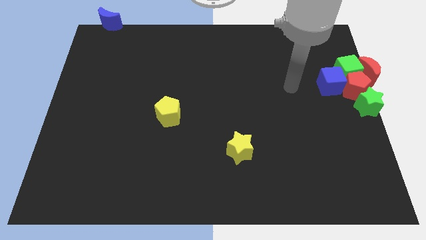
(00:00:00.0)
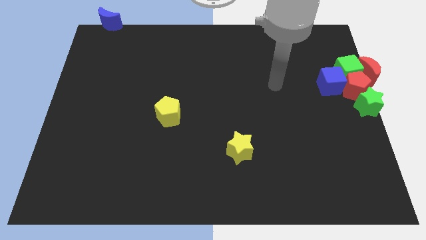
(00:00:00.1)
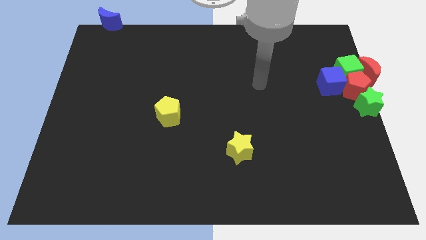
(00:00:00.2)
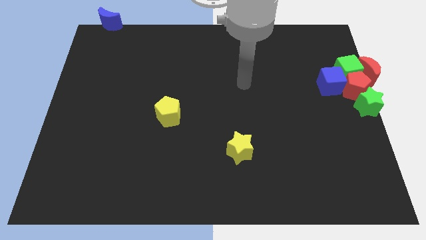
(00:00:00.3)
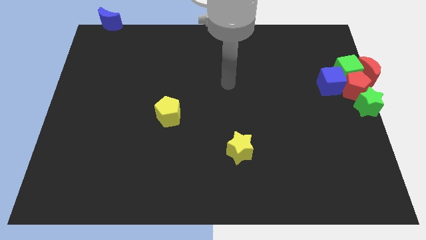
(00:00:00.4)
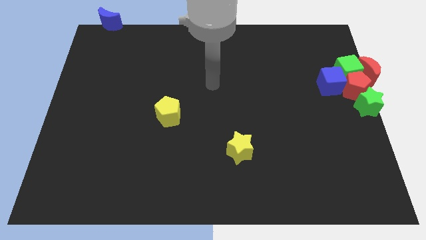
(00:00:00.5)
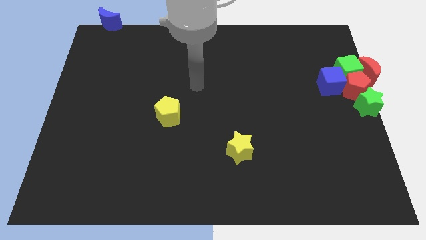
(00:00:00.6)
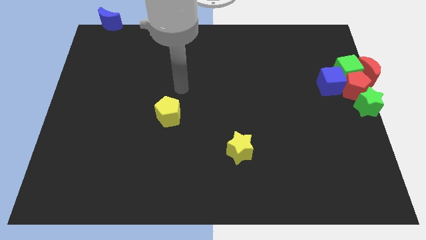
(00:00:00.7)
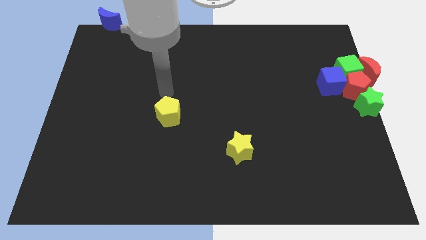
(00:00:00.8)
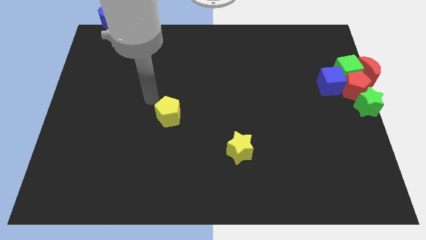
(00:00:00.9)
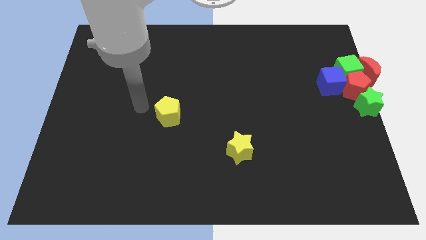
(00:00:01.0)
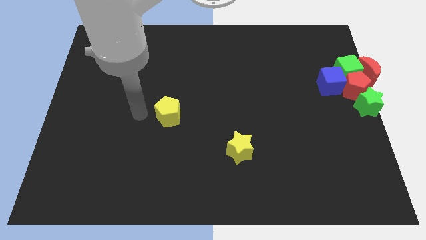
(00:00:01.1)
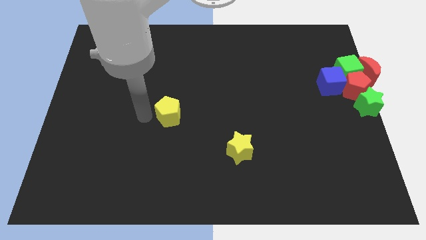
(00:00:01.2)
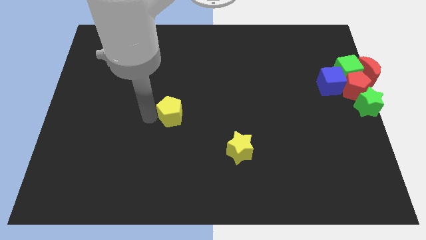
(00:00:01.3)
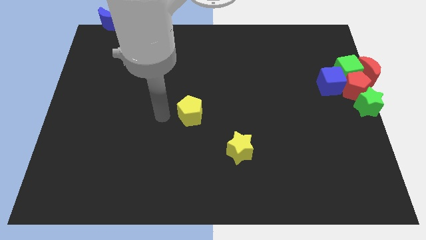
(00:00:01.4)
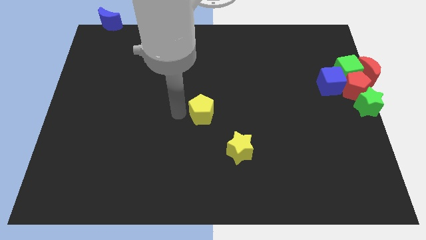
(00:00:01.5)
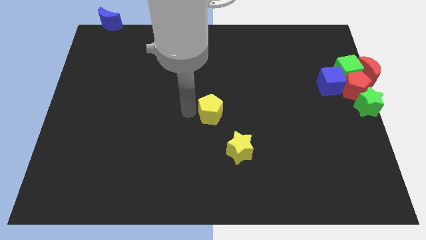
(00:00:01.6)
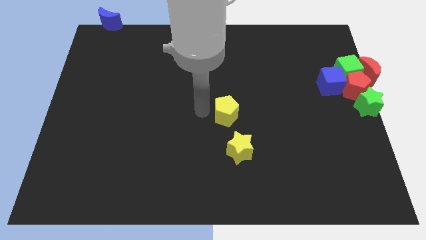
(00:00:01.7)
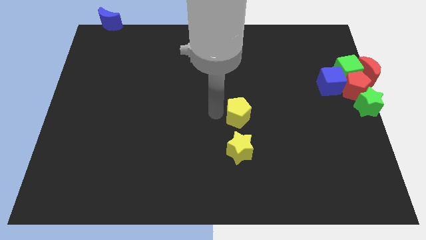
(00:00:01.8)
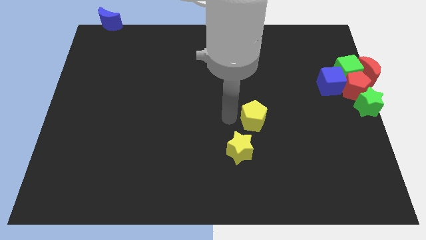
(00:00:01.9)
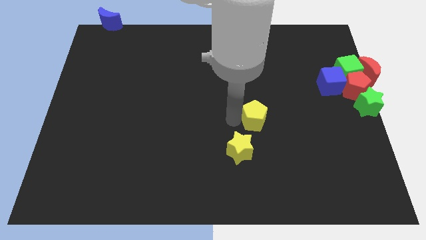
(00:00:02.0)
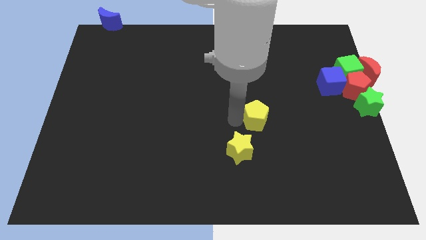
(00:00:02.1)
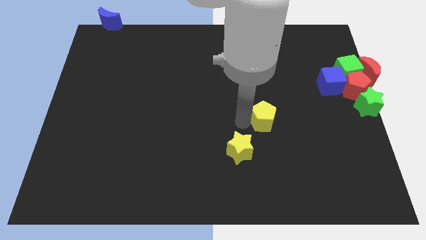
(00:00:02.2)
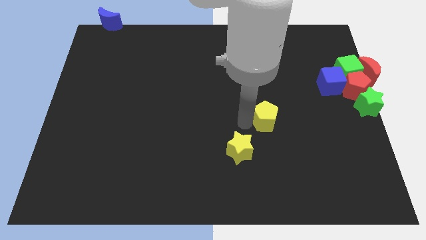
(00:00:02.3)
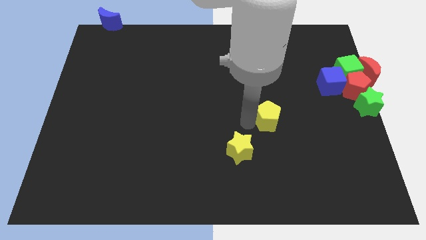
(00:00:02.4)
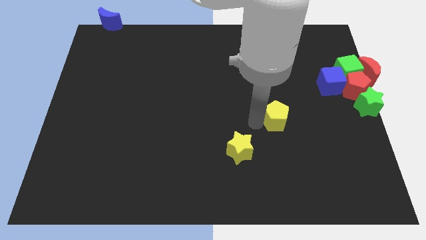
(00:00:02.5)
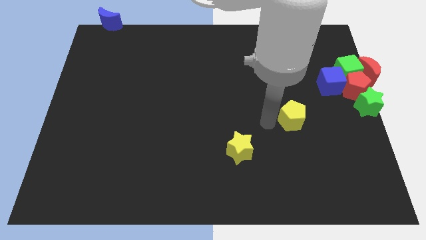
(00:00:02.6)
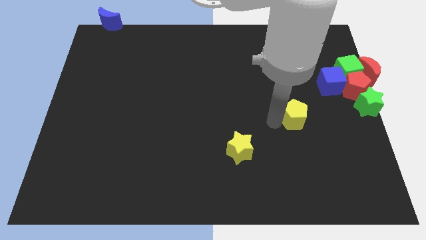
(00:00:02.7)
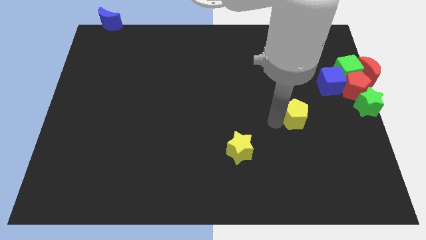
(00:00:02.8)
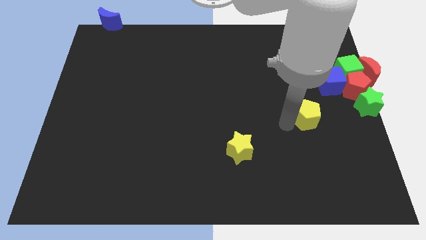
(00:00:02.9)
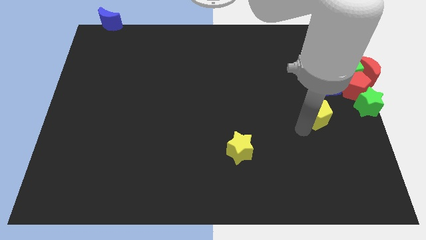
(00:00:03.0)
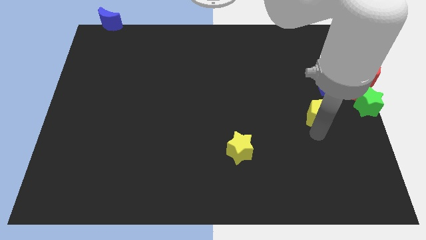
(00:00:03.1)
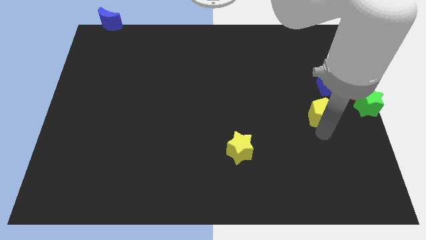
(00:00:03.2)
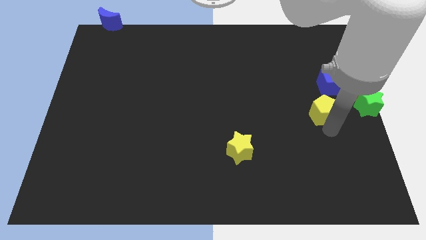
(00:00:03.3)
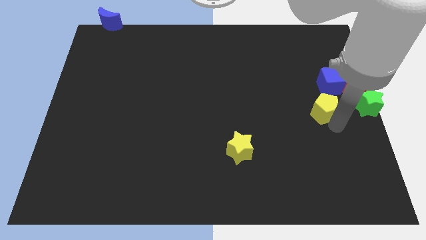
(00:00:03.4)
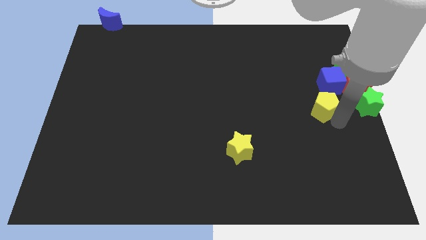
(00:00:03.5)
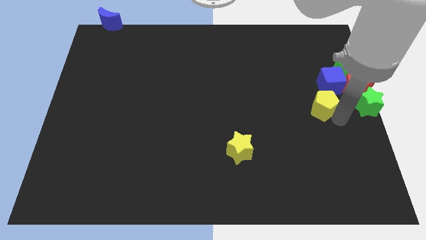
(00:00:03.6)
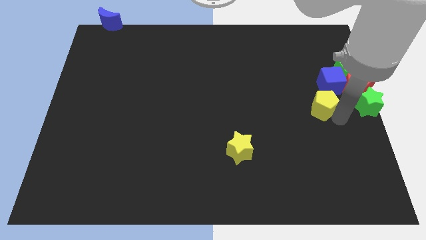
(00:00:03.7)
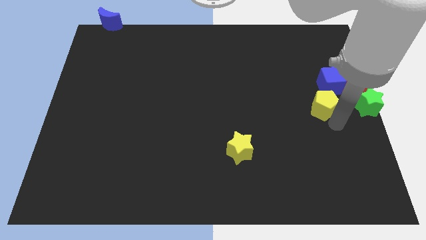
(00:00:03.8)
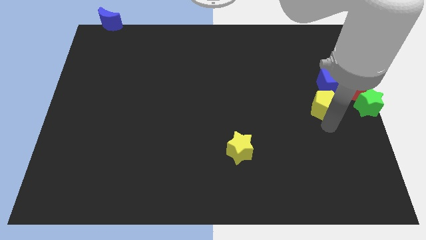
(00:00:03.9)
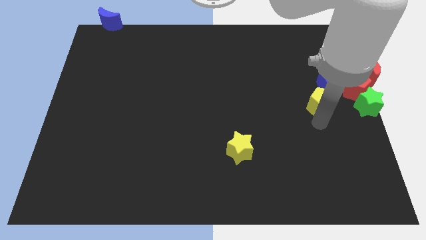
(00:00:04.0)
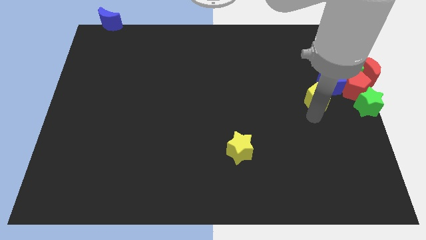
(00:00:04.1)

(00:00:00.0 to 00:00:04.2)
move the yellow pentagon towards the group of the blocks

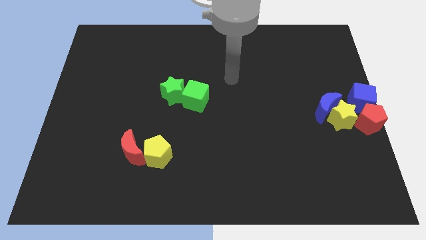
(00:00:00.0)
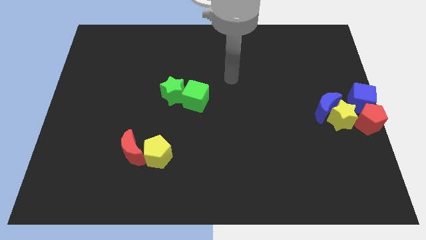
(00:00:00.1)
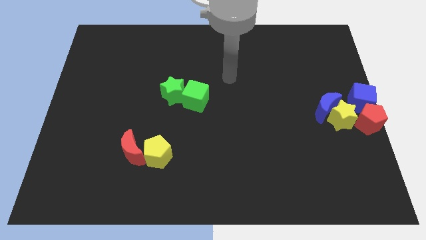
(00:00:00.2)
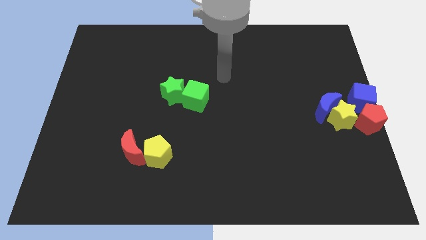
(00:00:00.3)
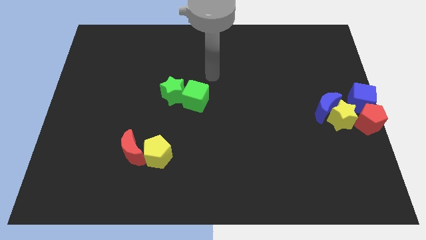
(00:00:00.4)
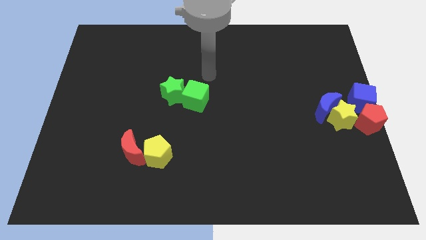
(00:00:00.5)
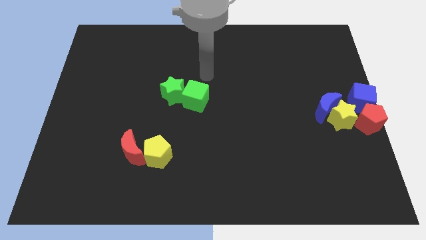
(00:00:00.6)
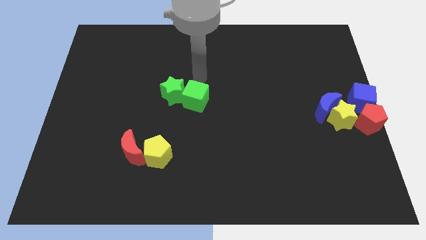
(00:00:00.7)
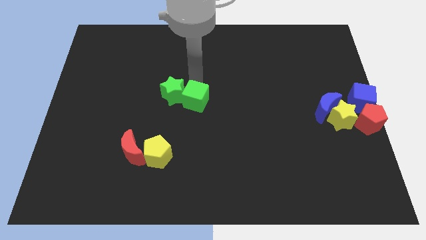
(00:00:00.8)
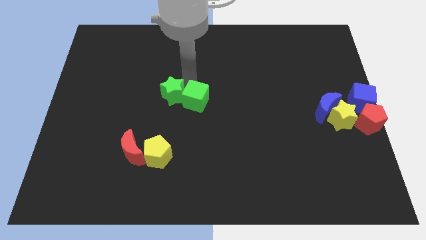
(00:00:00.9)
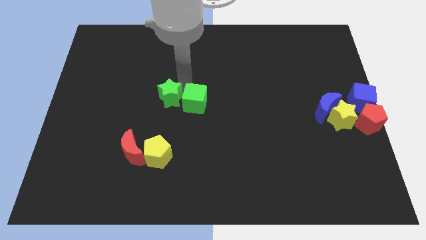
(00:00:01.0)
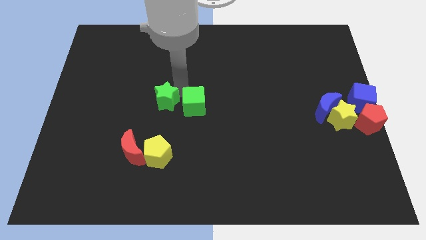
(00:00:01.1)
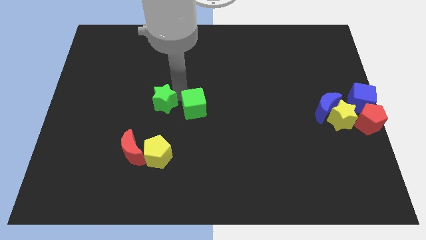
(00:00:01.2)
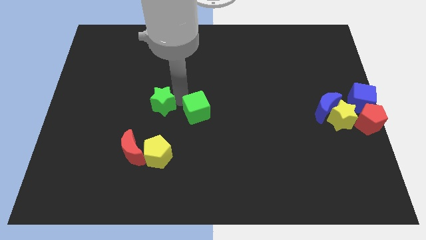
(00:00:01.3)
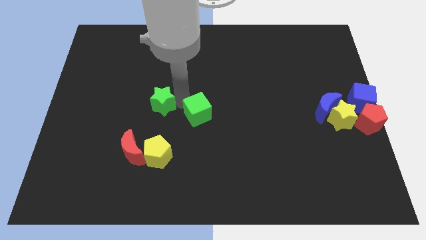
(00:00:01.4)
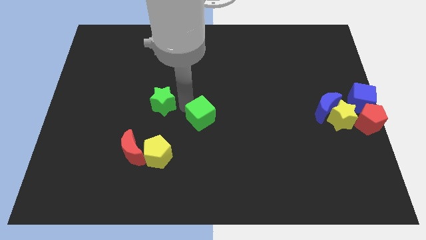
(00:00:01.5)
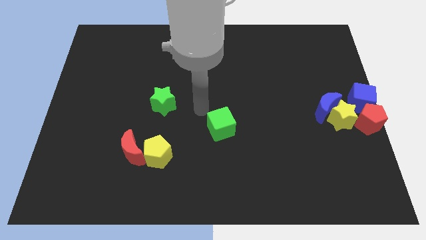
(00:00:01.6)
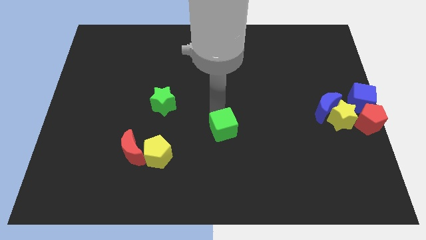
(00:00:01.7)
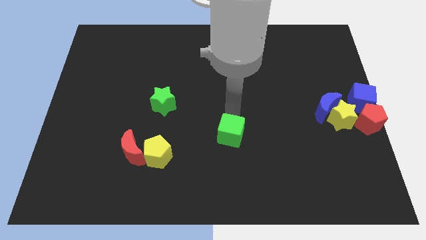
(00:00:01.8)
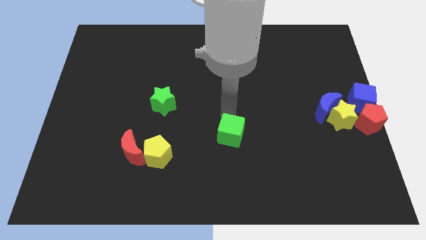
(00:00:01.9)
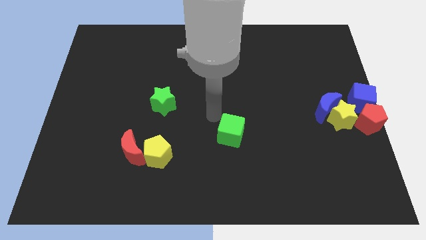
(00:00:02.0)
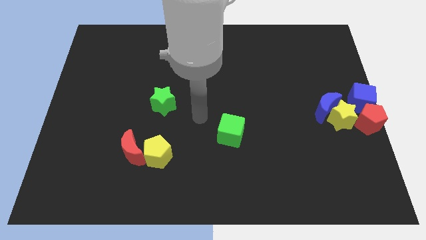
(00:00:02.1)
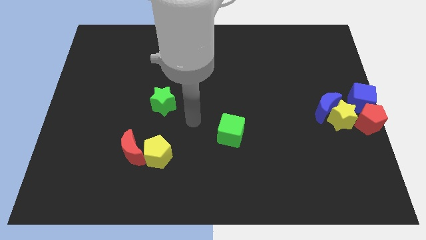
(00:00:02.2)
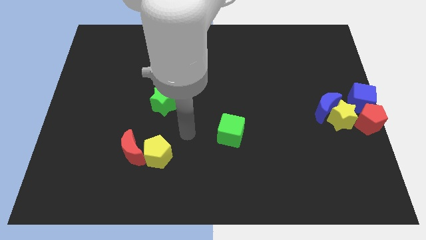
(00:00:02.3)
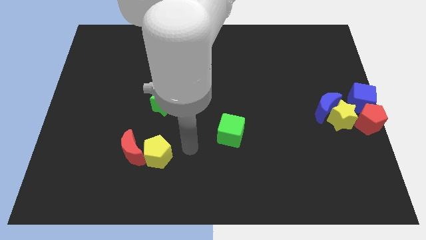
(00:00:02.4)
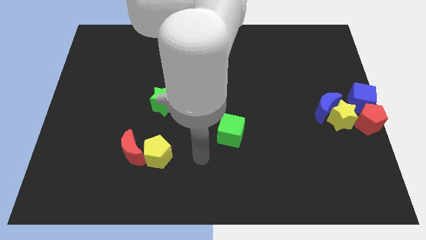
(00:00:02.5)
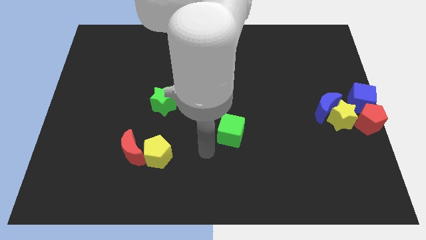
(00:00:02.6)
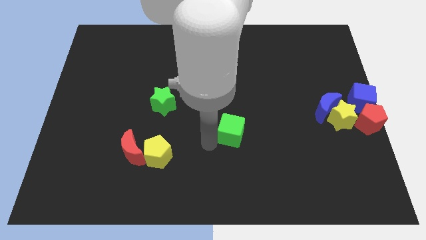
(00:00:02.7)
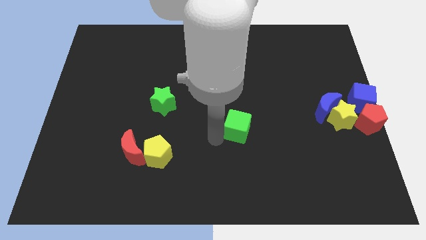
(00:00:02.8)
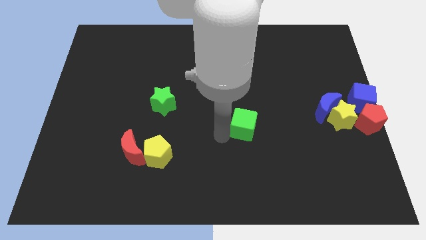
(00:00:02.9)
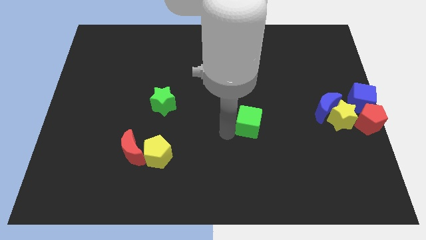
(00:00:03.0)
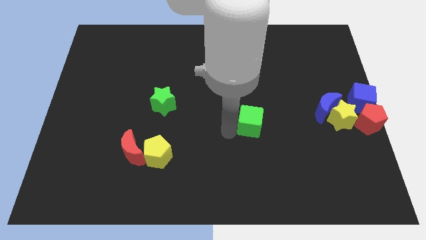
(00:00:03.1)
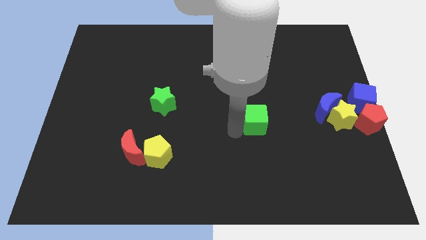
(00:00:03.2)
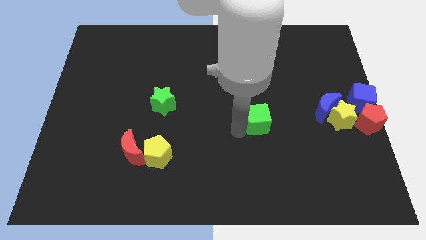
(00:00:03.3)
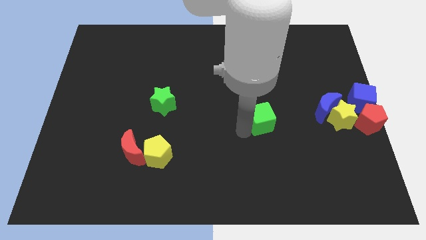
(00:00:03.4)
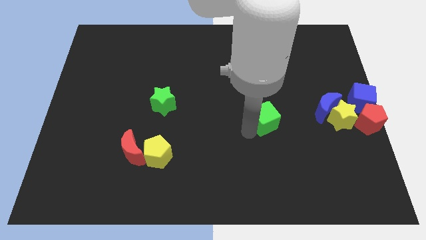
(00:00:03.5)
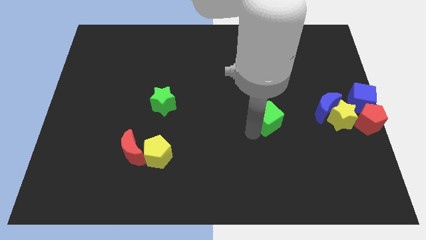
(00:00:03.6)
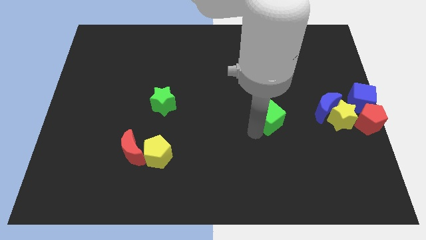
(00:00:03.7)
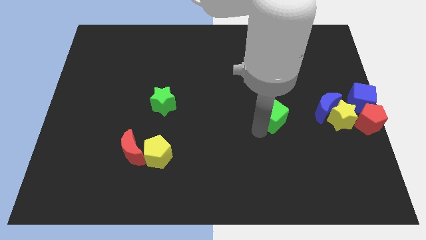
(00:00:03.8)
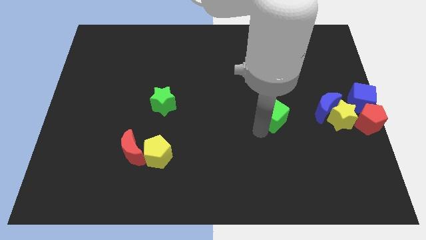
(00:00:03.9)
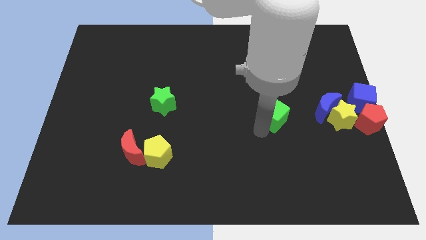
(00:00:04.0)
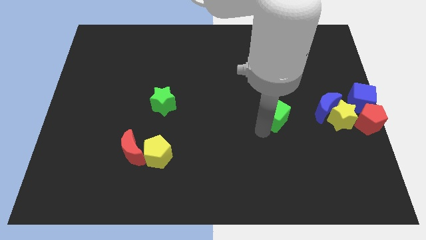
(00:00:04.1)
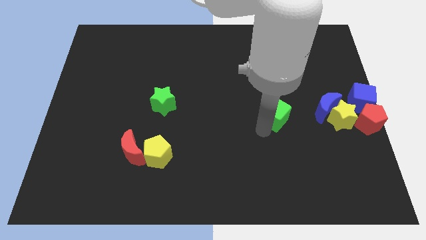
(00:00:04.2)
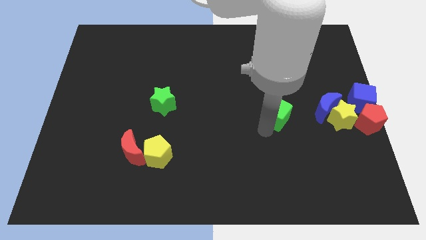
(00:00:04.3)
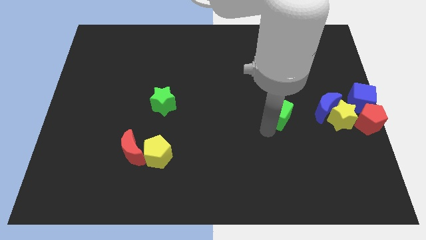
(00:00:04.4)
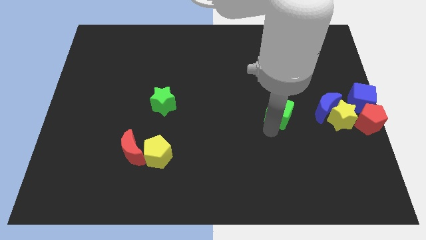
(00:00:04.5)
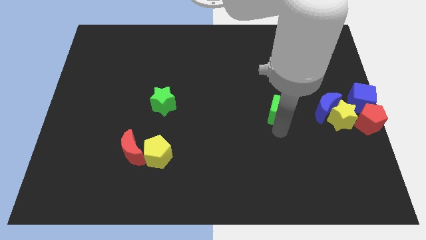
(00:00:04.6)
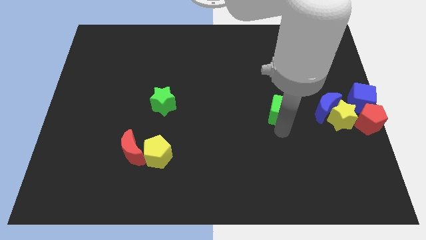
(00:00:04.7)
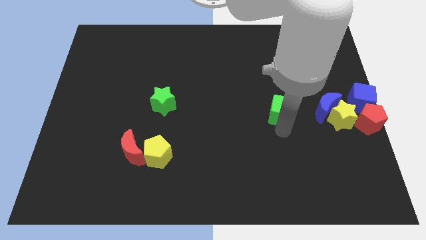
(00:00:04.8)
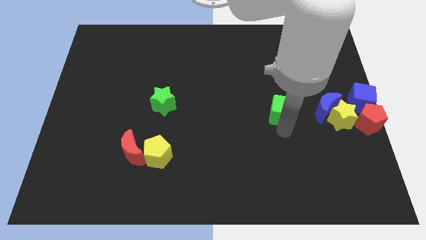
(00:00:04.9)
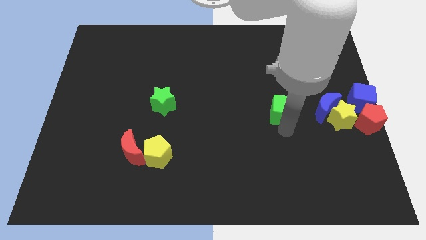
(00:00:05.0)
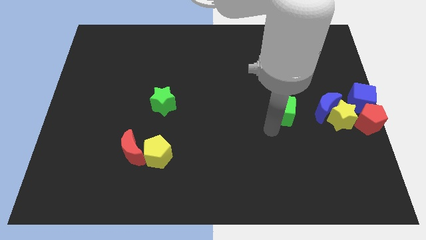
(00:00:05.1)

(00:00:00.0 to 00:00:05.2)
place the green cube to the left of the blue moon
